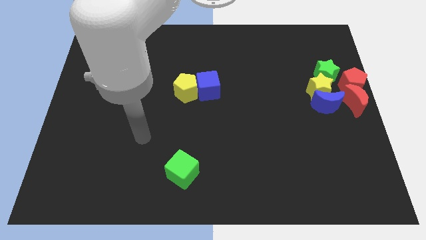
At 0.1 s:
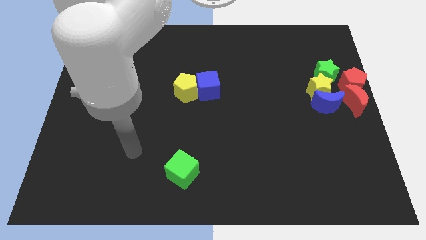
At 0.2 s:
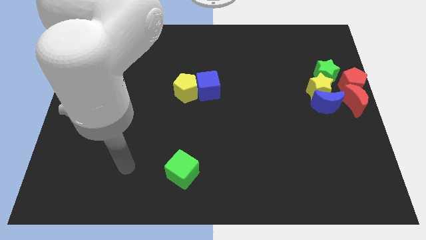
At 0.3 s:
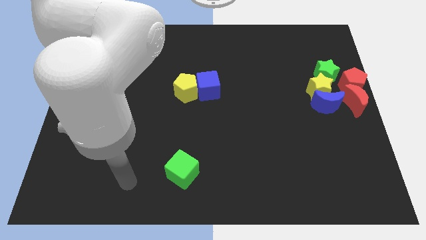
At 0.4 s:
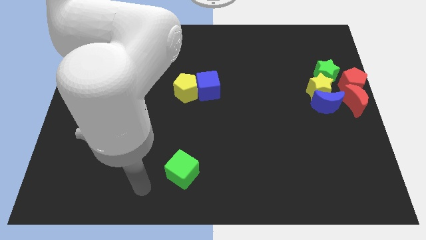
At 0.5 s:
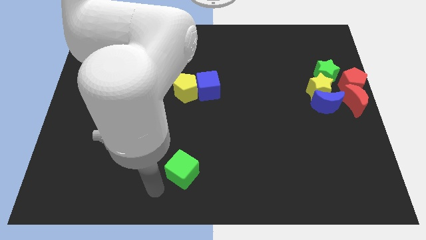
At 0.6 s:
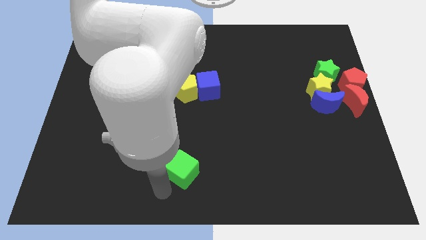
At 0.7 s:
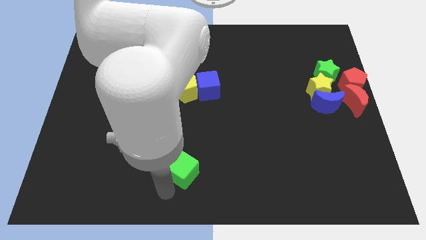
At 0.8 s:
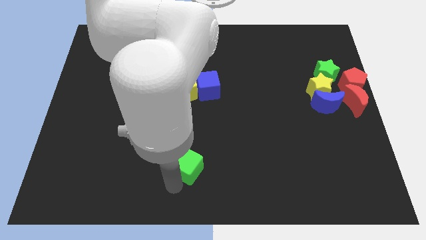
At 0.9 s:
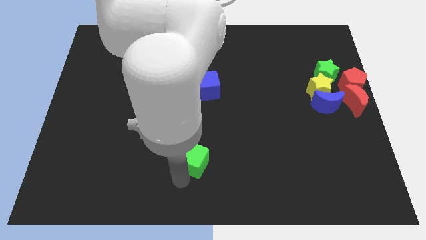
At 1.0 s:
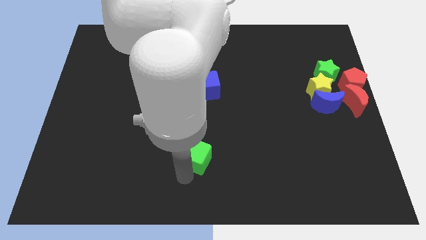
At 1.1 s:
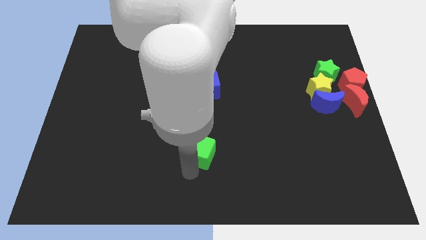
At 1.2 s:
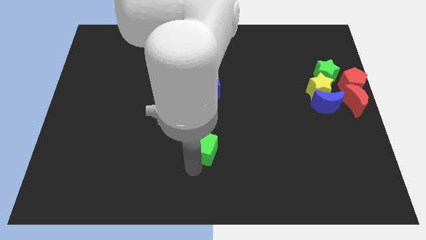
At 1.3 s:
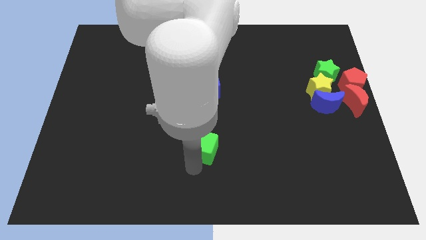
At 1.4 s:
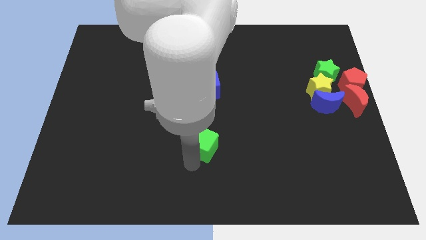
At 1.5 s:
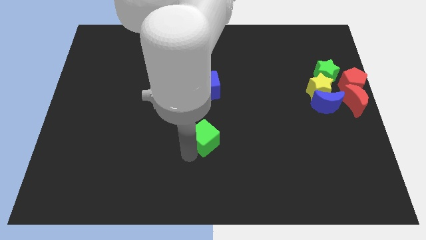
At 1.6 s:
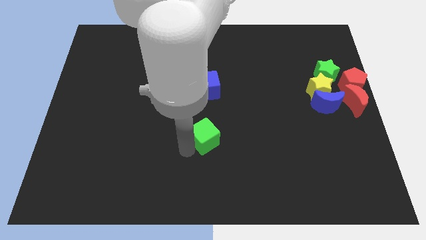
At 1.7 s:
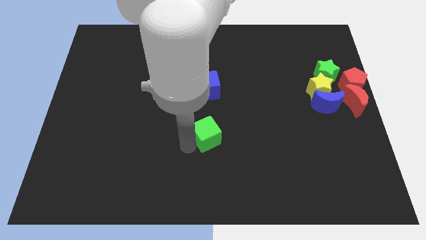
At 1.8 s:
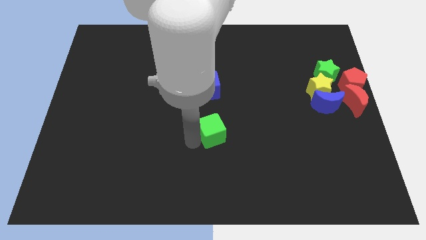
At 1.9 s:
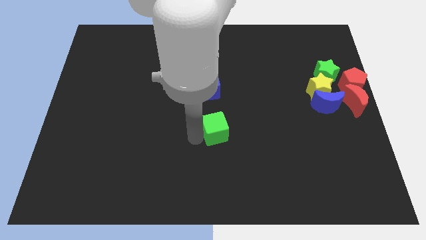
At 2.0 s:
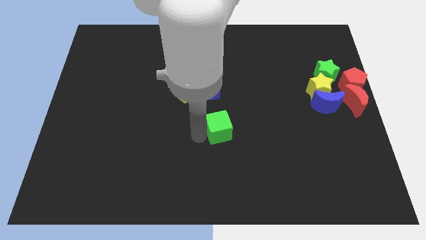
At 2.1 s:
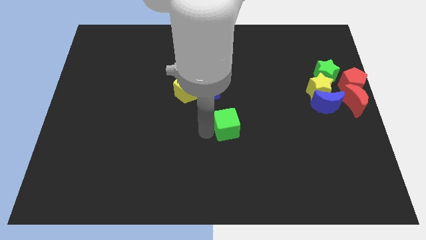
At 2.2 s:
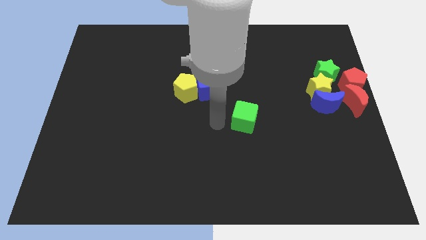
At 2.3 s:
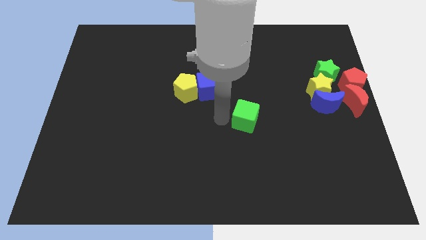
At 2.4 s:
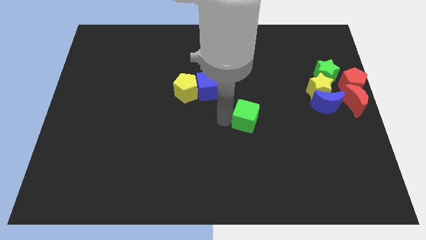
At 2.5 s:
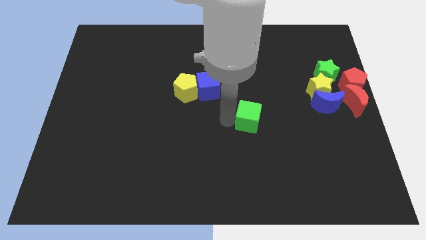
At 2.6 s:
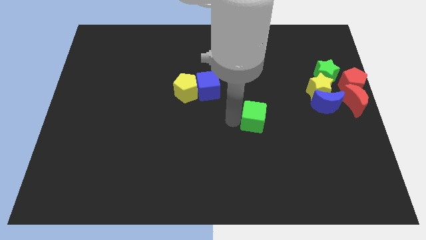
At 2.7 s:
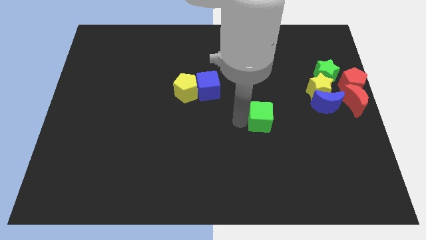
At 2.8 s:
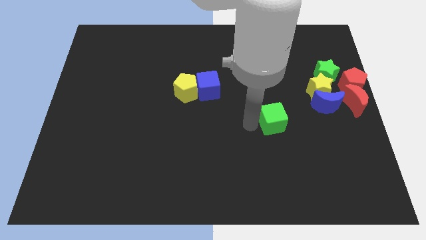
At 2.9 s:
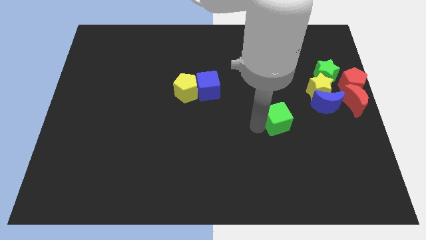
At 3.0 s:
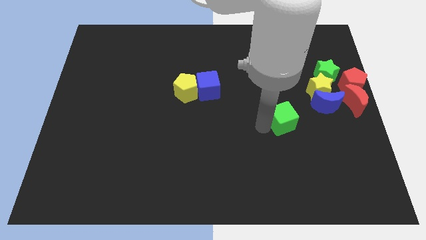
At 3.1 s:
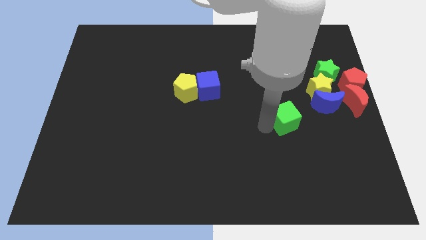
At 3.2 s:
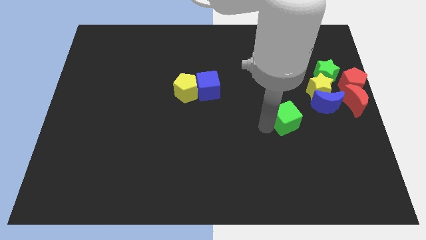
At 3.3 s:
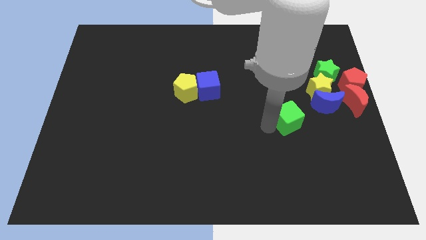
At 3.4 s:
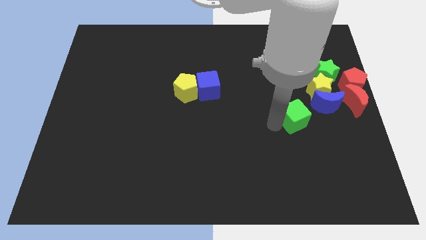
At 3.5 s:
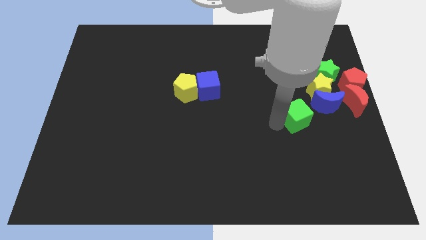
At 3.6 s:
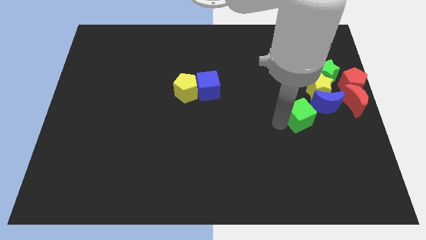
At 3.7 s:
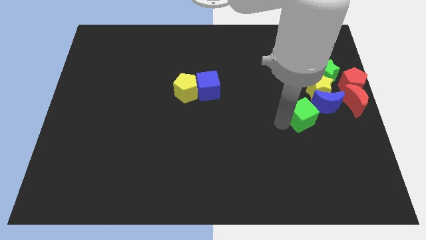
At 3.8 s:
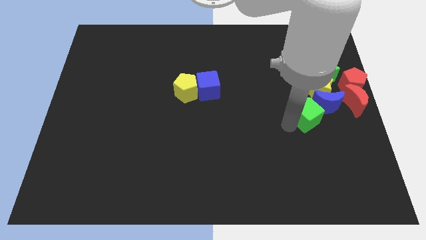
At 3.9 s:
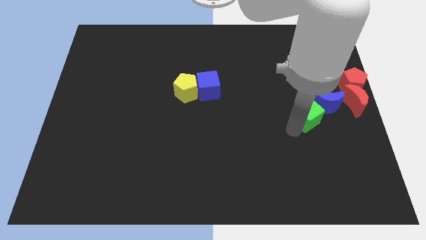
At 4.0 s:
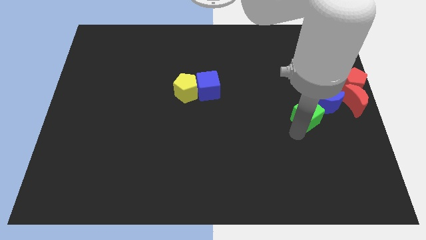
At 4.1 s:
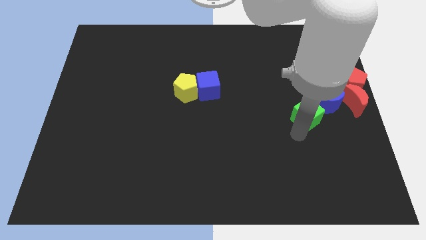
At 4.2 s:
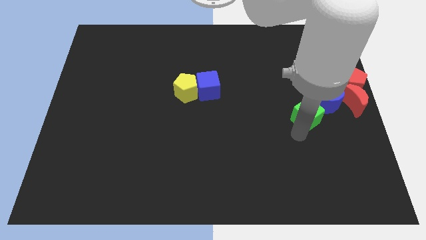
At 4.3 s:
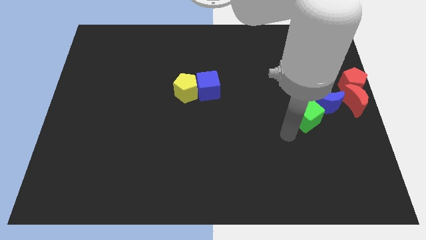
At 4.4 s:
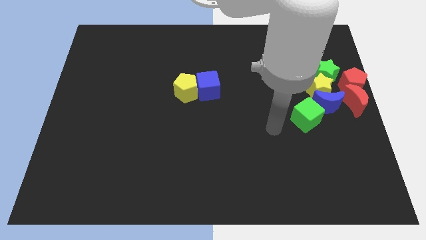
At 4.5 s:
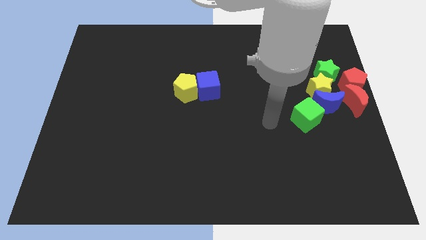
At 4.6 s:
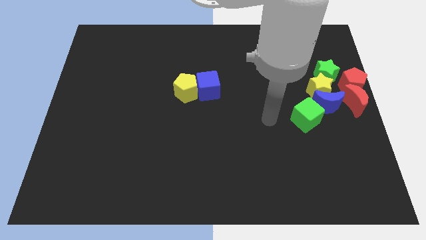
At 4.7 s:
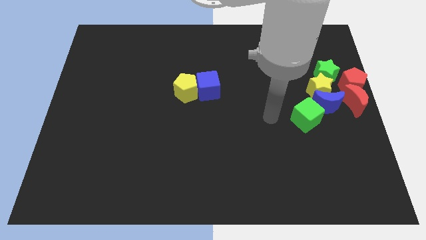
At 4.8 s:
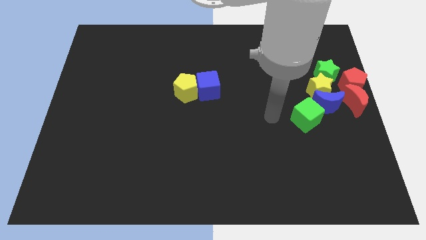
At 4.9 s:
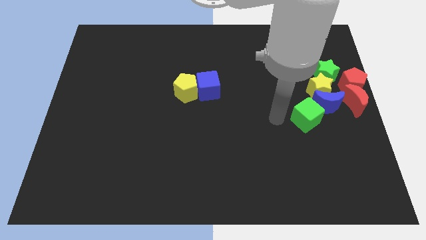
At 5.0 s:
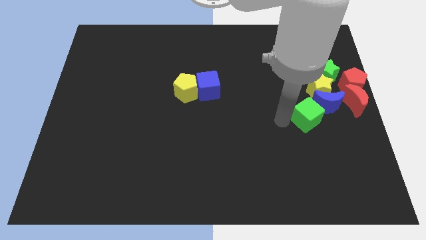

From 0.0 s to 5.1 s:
move the green cube diagonally left to the blue crescent

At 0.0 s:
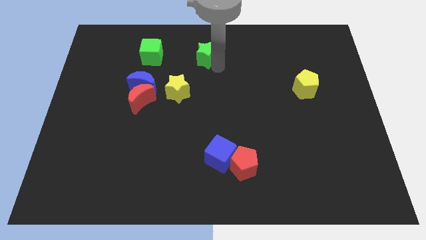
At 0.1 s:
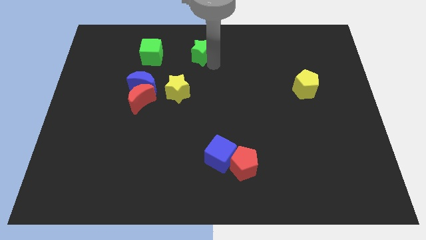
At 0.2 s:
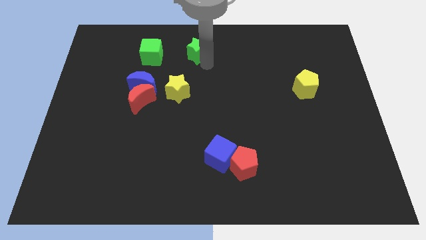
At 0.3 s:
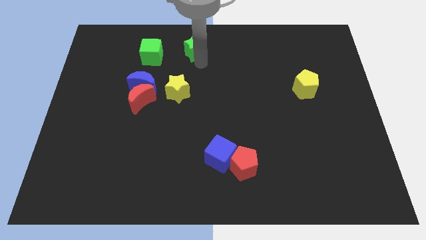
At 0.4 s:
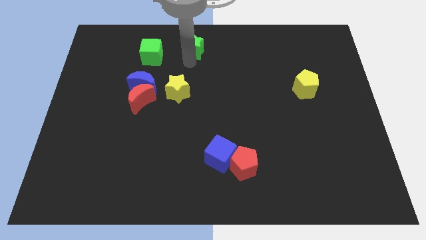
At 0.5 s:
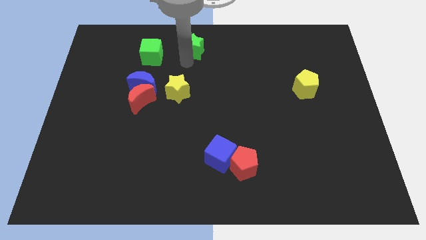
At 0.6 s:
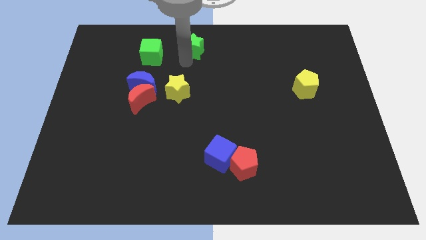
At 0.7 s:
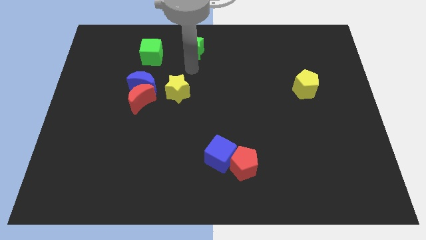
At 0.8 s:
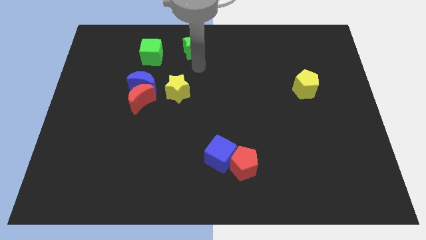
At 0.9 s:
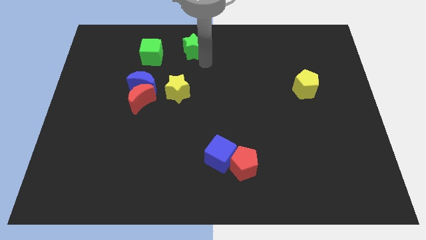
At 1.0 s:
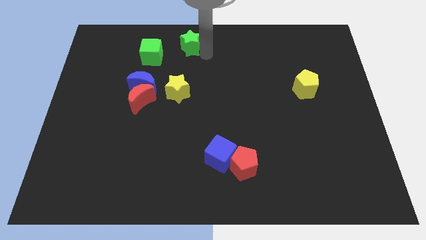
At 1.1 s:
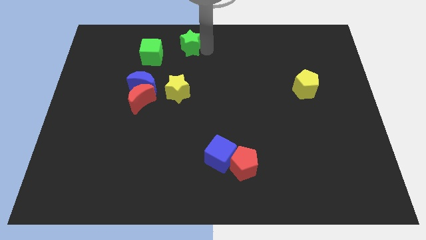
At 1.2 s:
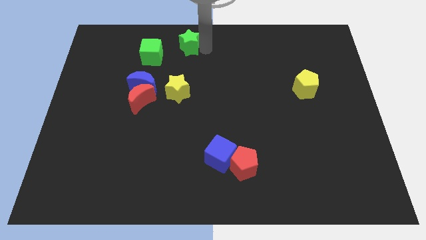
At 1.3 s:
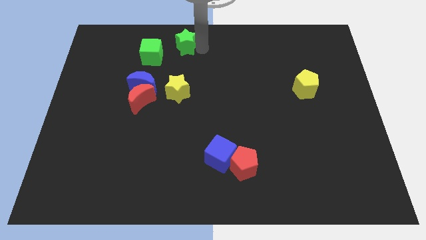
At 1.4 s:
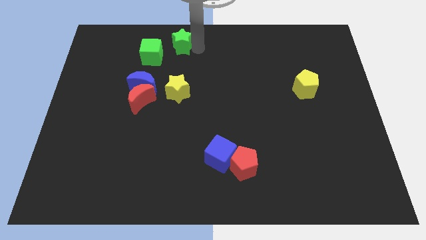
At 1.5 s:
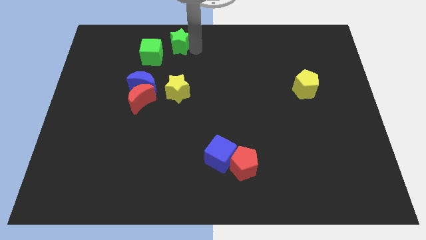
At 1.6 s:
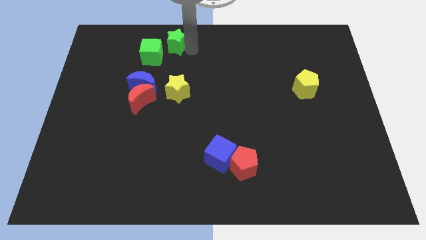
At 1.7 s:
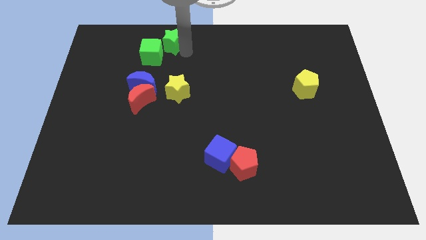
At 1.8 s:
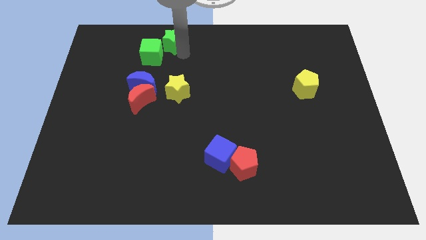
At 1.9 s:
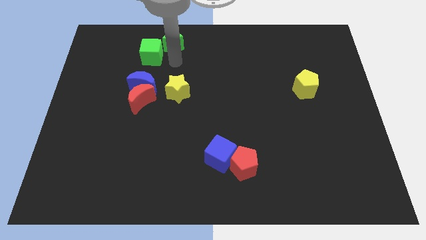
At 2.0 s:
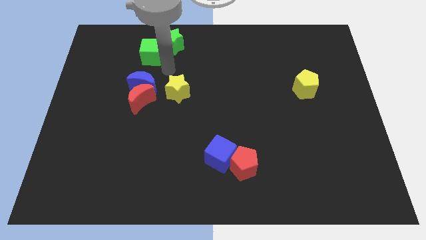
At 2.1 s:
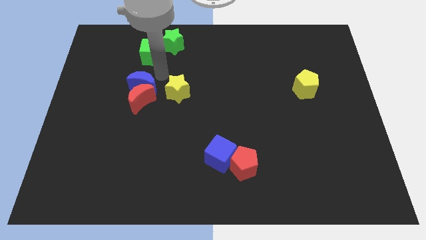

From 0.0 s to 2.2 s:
place the green star diagonally right of the green cube

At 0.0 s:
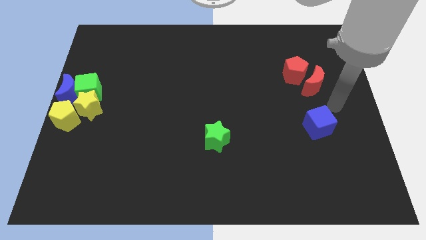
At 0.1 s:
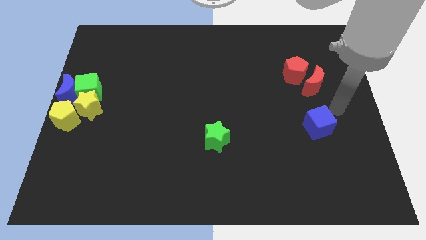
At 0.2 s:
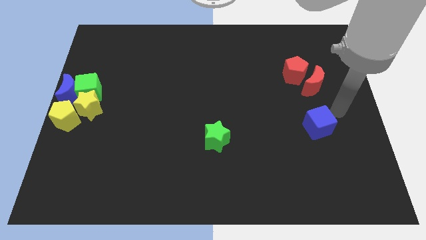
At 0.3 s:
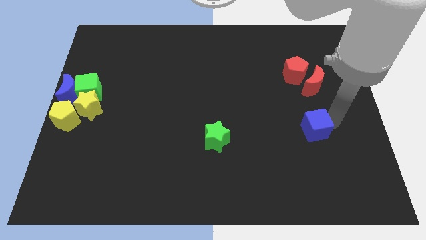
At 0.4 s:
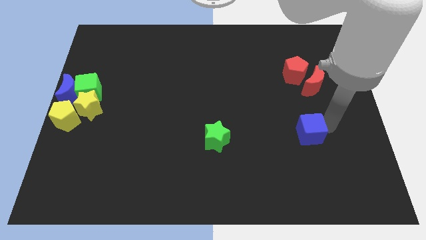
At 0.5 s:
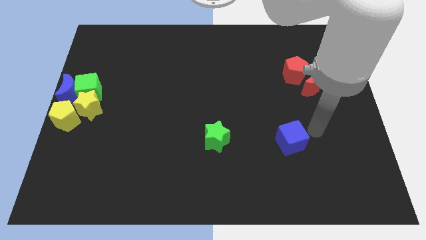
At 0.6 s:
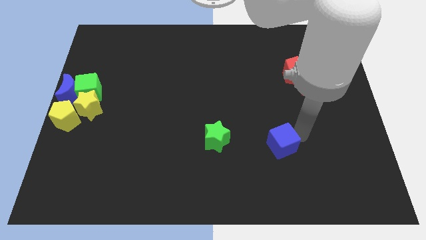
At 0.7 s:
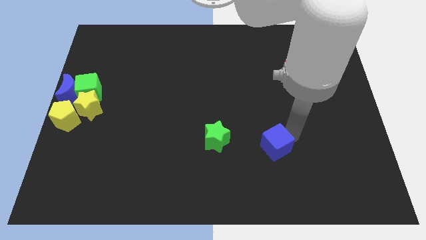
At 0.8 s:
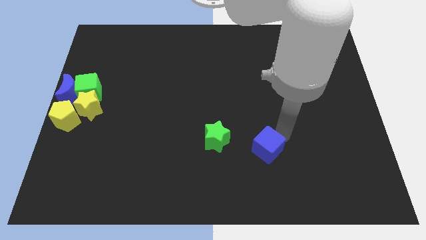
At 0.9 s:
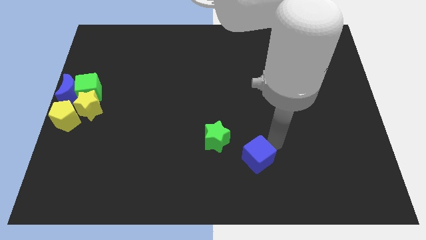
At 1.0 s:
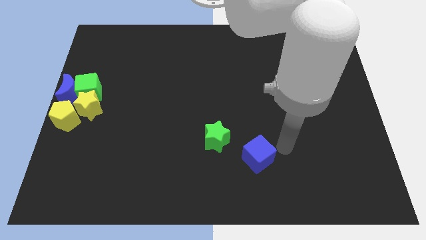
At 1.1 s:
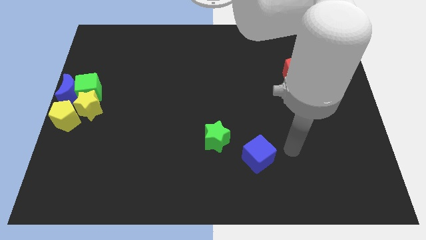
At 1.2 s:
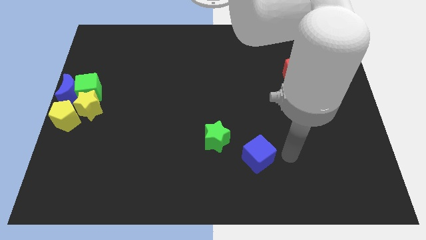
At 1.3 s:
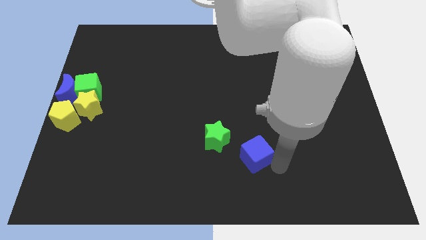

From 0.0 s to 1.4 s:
move the blue cube towards the bottom center of the board

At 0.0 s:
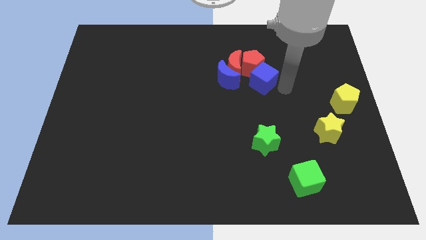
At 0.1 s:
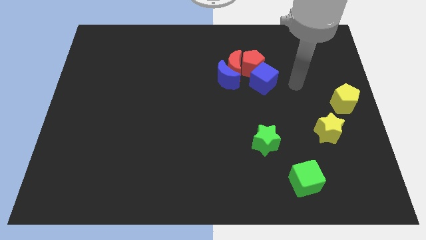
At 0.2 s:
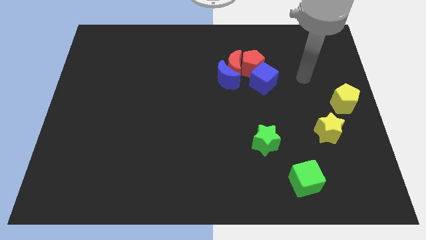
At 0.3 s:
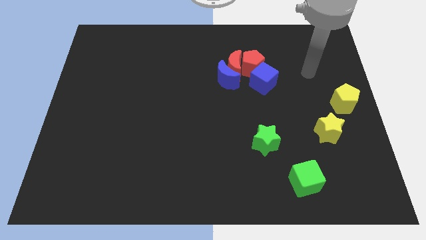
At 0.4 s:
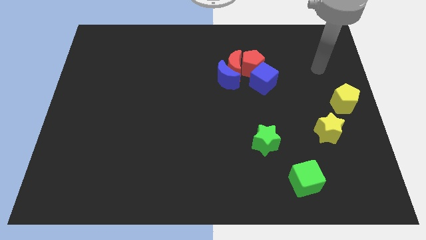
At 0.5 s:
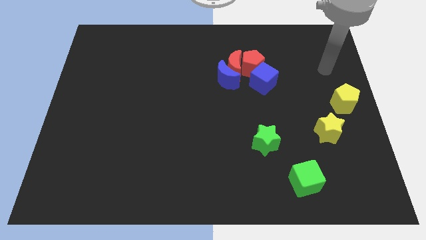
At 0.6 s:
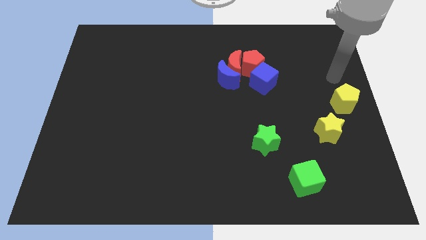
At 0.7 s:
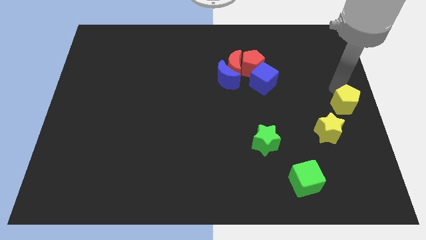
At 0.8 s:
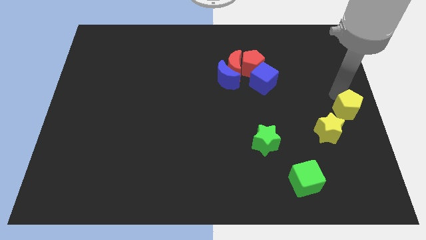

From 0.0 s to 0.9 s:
tap the yellow pentagon
